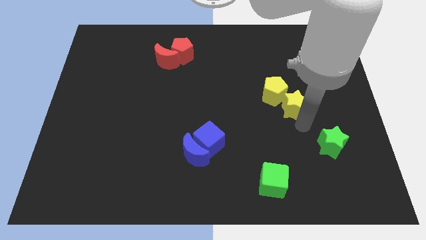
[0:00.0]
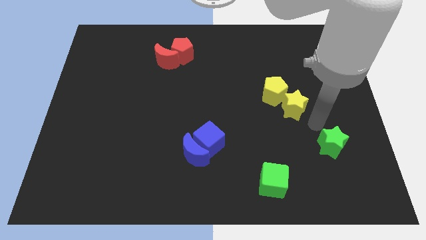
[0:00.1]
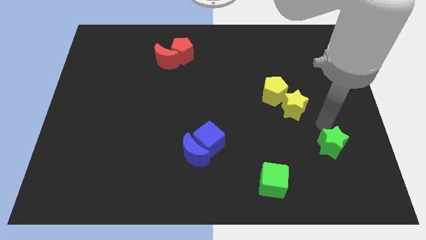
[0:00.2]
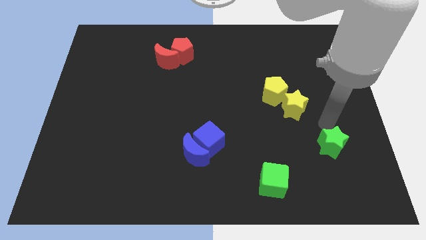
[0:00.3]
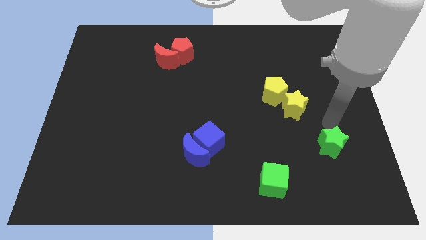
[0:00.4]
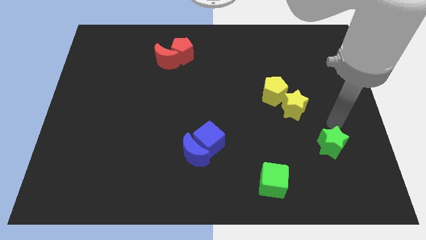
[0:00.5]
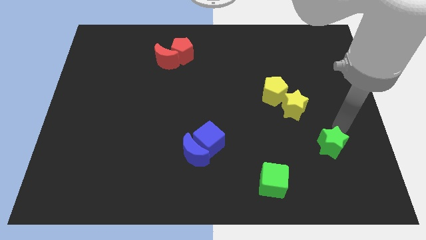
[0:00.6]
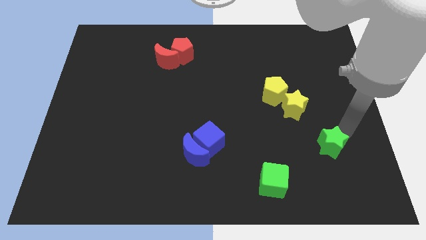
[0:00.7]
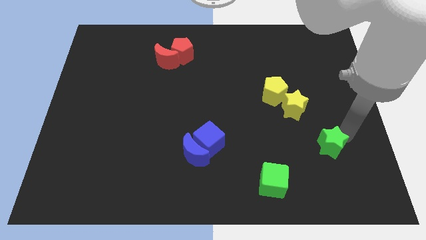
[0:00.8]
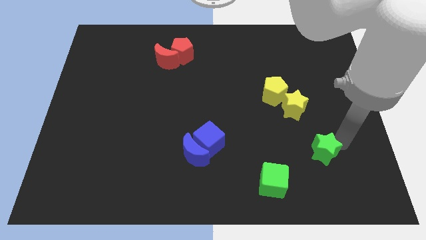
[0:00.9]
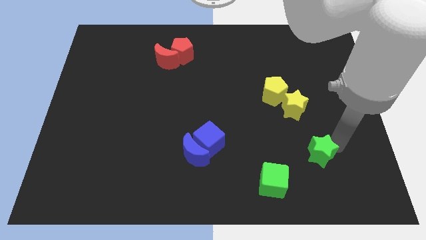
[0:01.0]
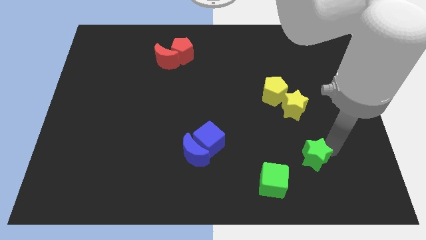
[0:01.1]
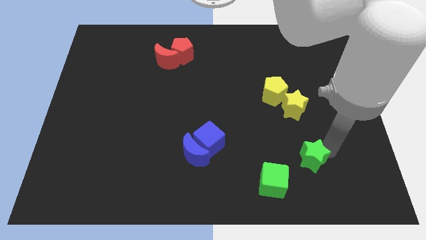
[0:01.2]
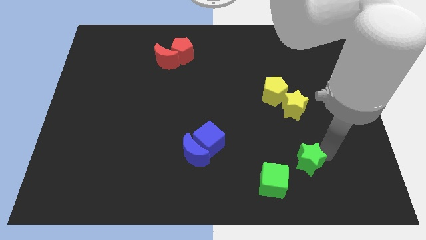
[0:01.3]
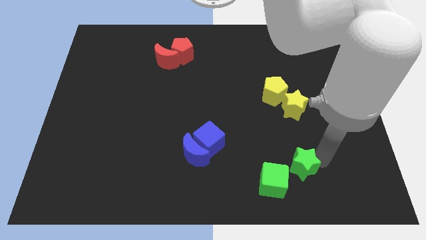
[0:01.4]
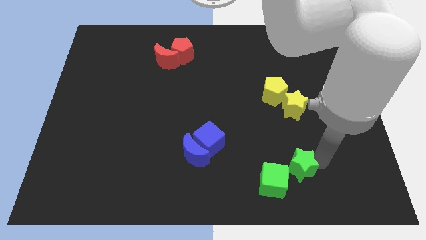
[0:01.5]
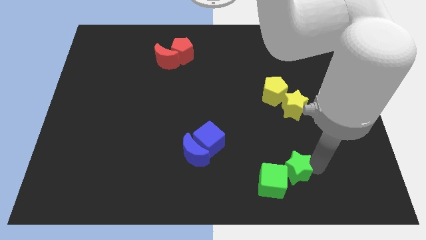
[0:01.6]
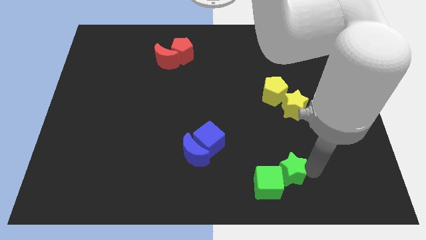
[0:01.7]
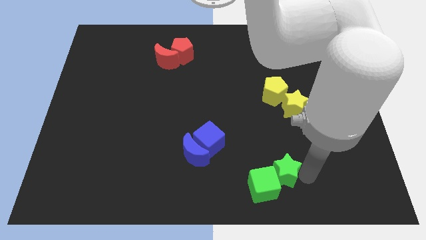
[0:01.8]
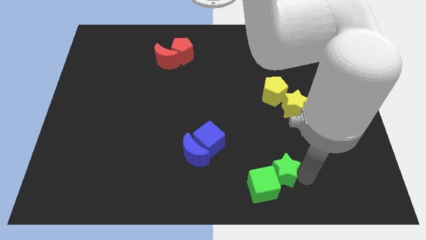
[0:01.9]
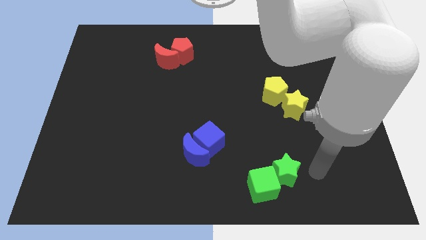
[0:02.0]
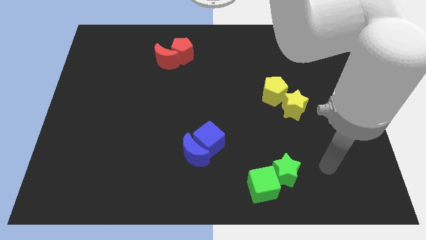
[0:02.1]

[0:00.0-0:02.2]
add green star into green cube

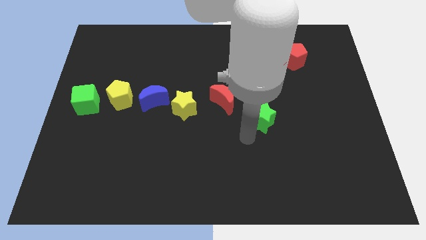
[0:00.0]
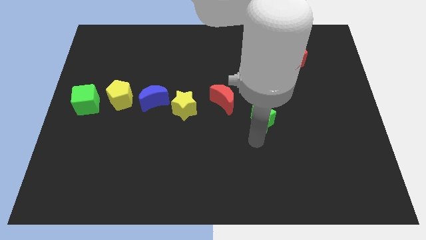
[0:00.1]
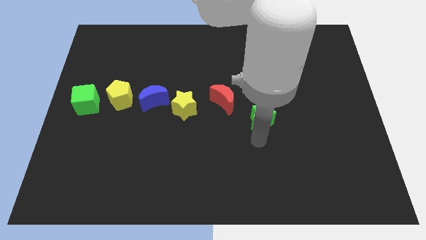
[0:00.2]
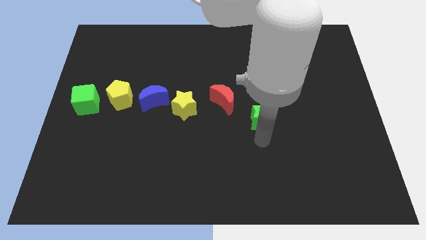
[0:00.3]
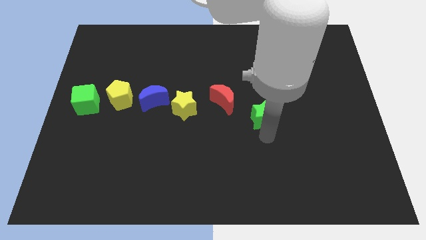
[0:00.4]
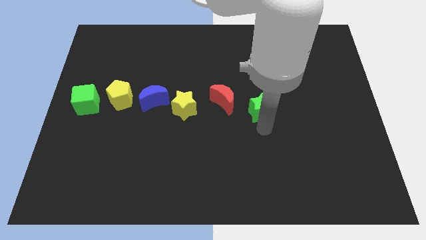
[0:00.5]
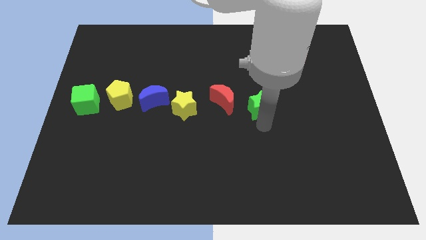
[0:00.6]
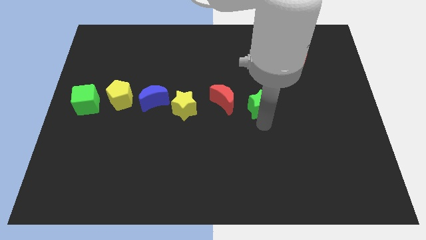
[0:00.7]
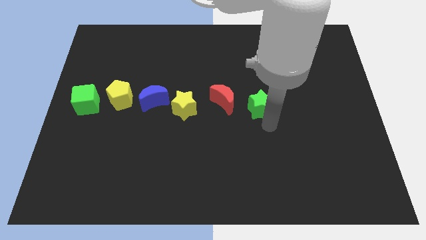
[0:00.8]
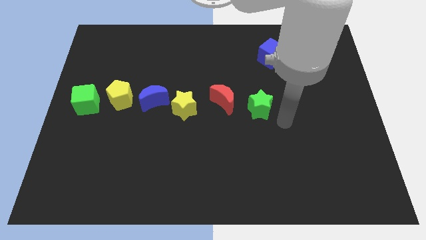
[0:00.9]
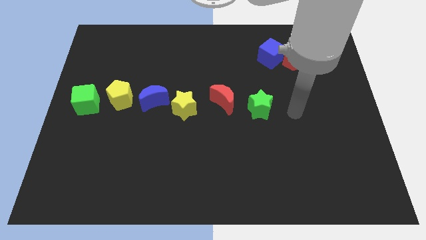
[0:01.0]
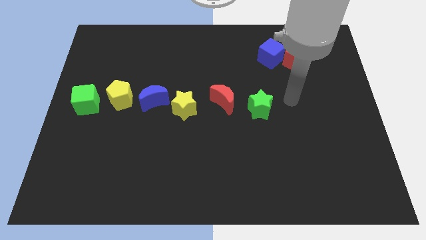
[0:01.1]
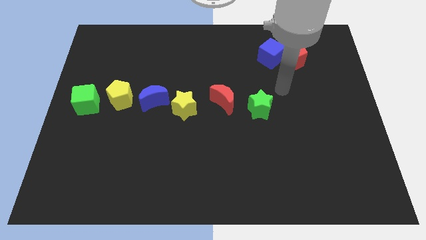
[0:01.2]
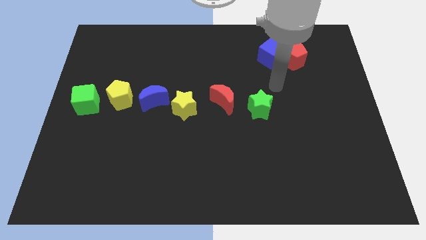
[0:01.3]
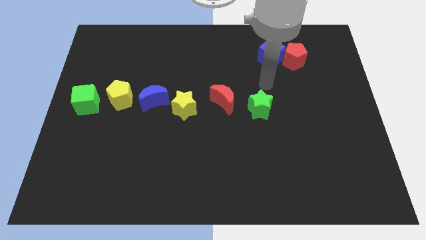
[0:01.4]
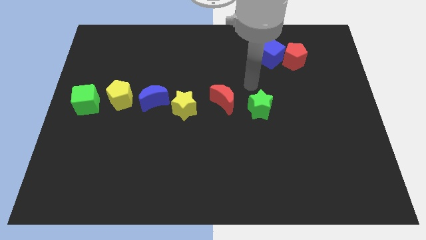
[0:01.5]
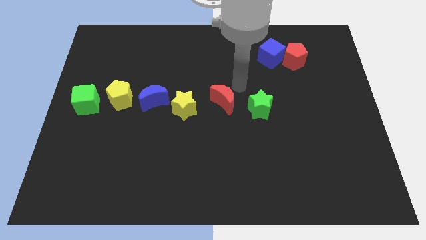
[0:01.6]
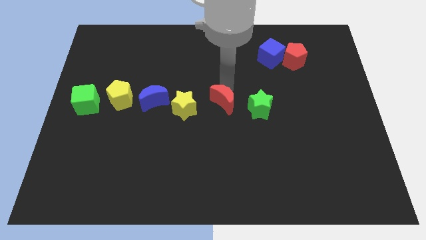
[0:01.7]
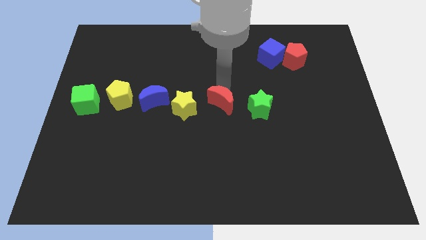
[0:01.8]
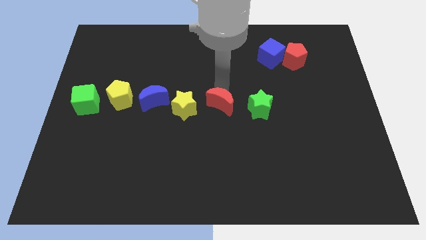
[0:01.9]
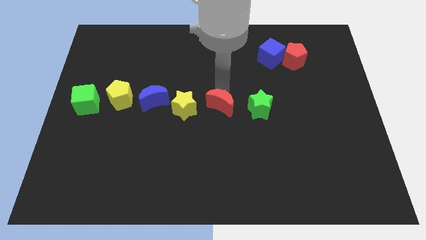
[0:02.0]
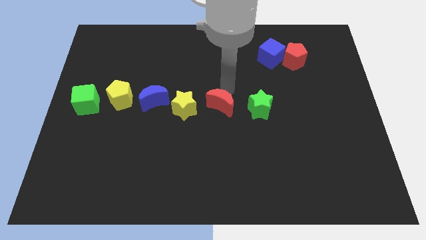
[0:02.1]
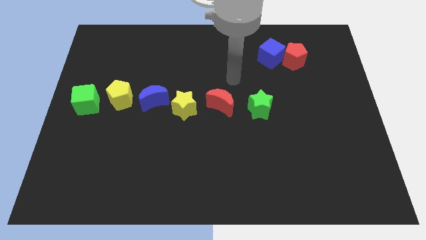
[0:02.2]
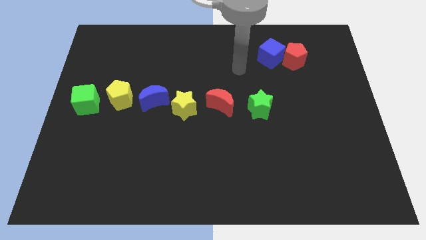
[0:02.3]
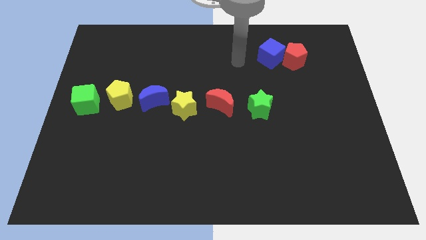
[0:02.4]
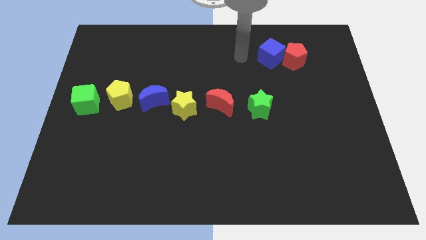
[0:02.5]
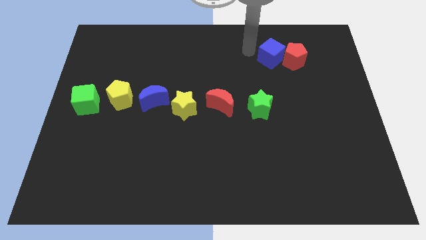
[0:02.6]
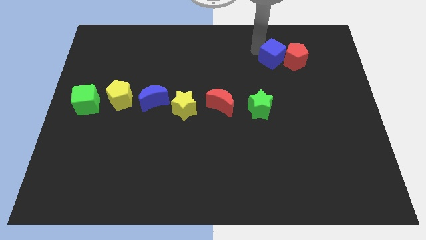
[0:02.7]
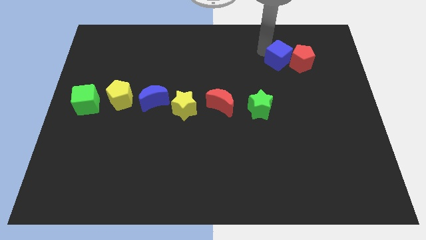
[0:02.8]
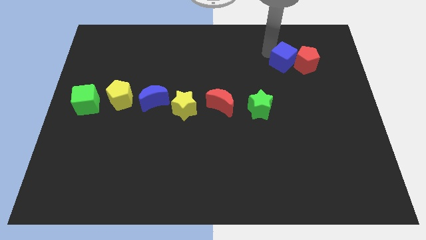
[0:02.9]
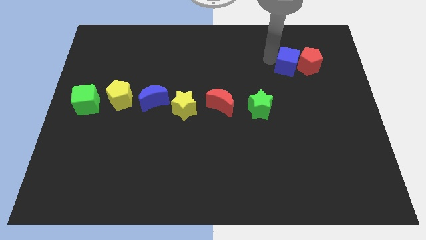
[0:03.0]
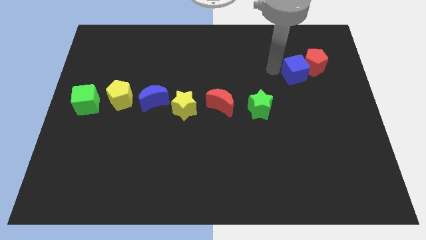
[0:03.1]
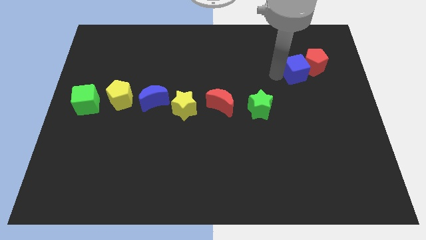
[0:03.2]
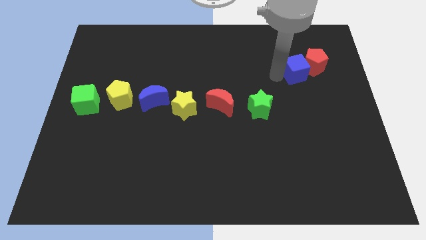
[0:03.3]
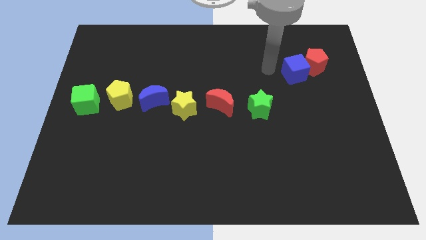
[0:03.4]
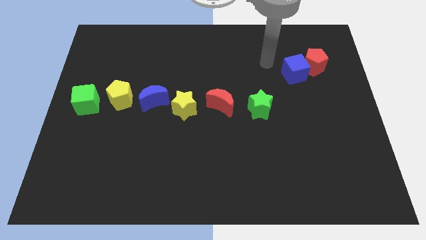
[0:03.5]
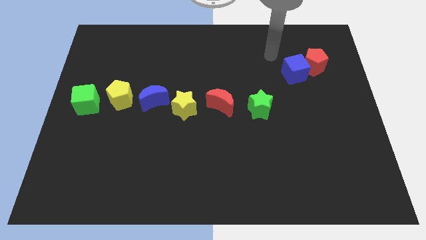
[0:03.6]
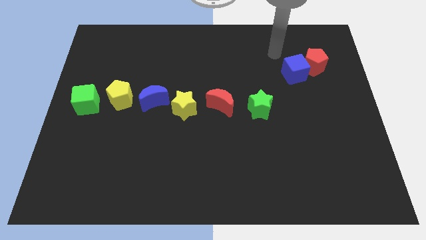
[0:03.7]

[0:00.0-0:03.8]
slightly move the red moon towards the bottom of the board

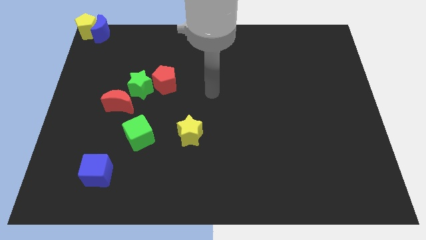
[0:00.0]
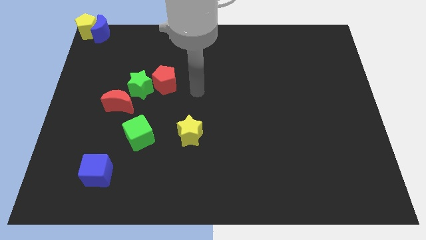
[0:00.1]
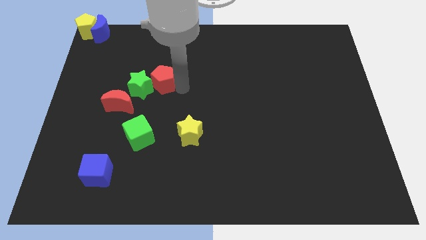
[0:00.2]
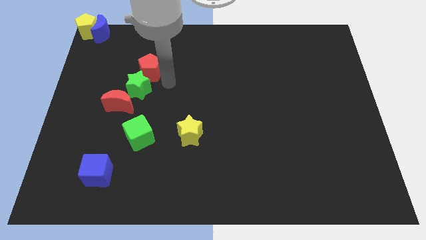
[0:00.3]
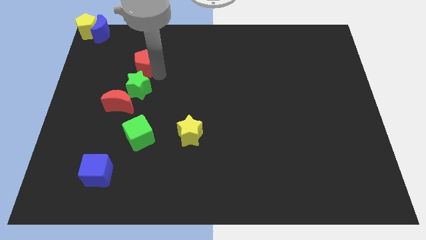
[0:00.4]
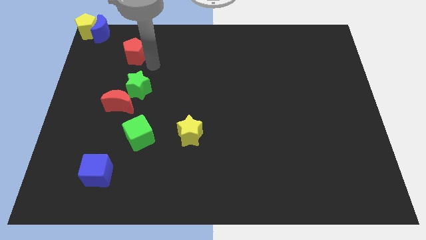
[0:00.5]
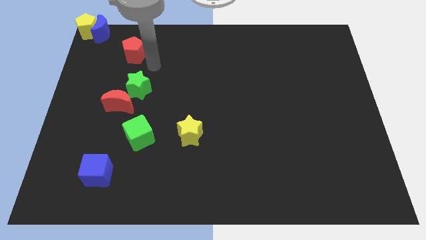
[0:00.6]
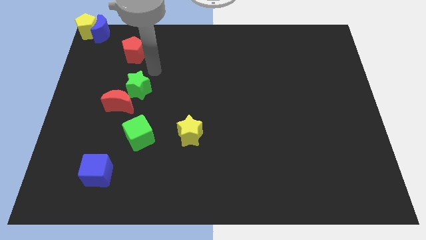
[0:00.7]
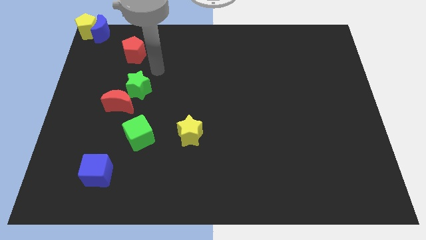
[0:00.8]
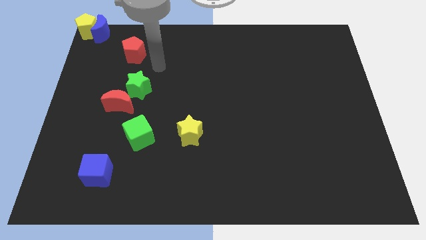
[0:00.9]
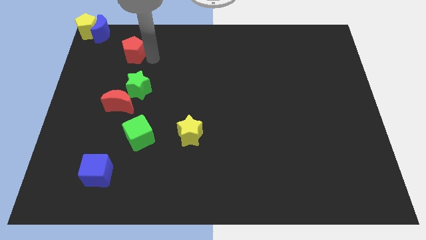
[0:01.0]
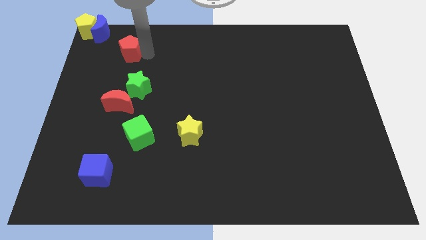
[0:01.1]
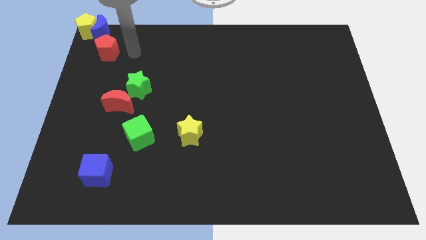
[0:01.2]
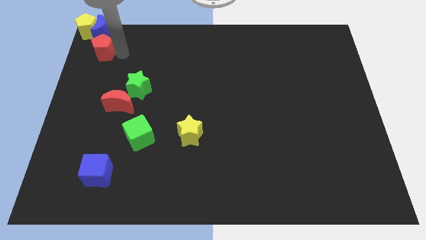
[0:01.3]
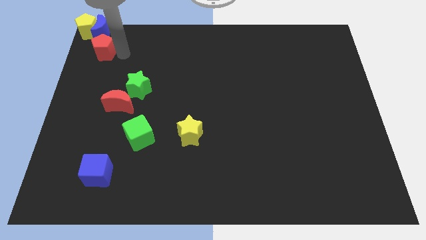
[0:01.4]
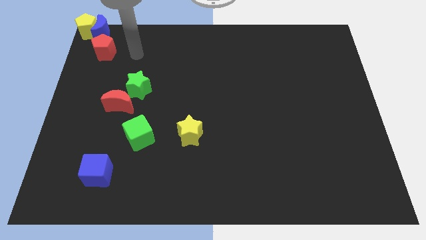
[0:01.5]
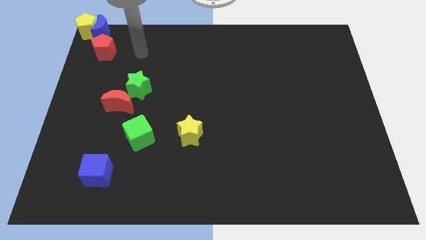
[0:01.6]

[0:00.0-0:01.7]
separate the red pentagon from green star

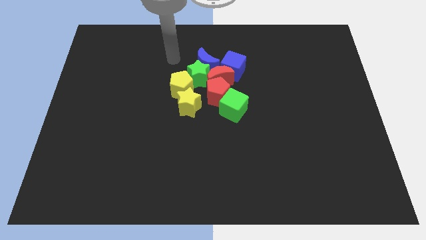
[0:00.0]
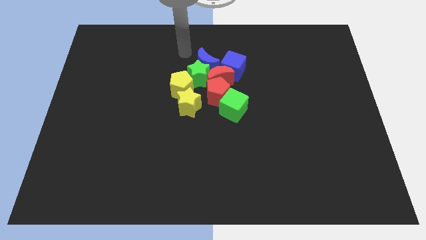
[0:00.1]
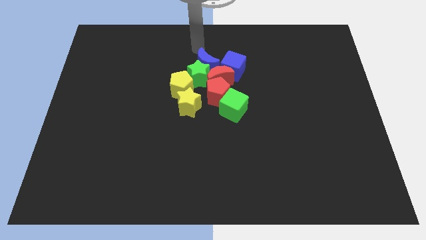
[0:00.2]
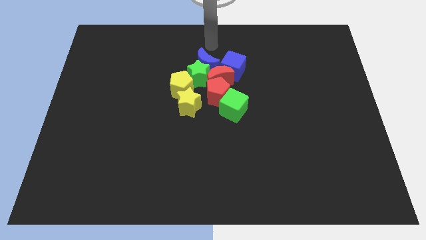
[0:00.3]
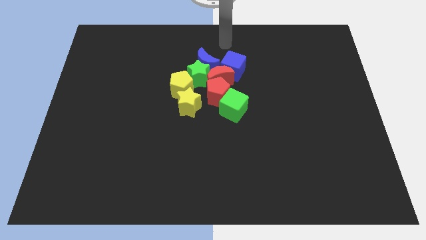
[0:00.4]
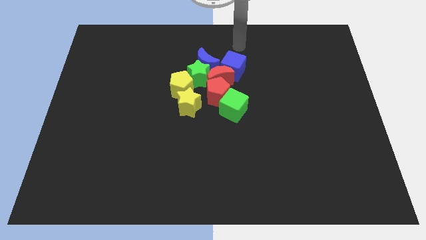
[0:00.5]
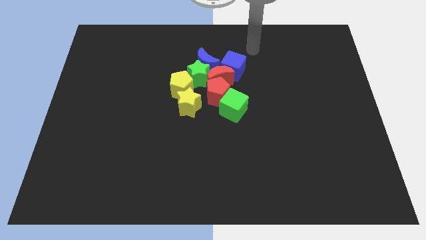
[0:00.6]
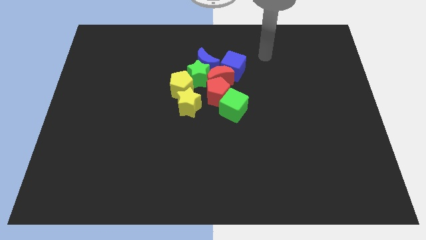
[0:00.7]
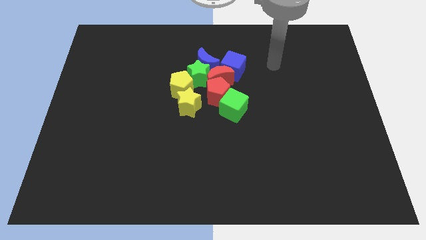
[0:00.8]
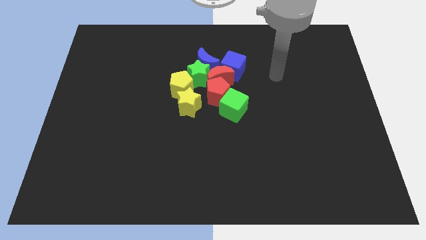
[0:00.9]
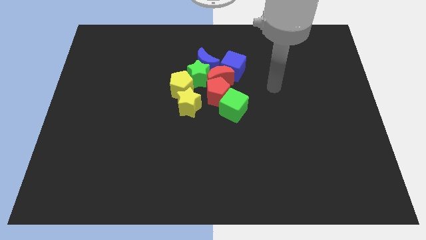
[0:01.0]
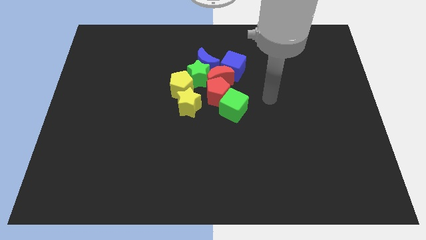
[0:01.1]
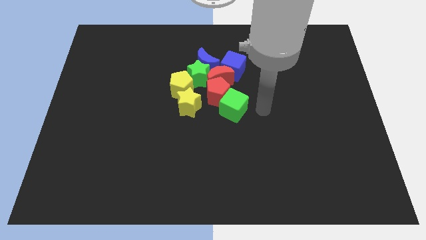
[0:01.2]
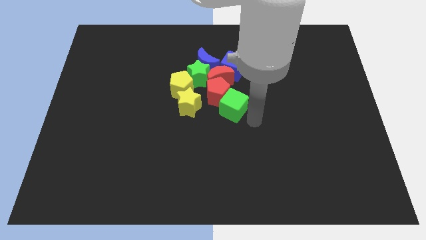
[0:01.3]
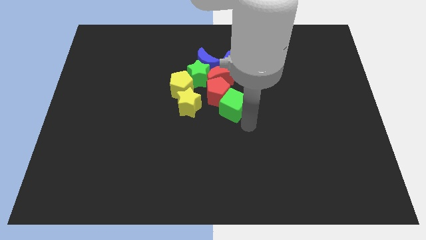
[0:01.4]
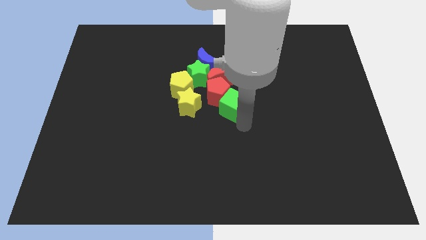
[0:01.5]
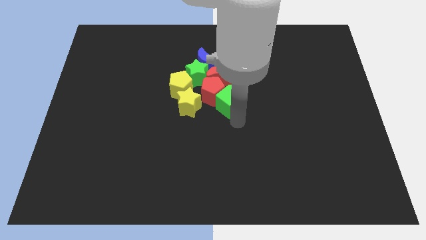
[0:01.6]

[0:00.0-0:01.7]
move the arm towards the green cube
